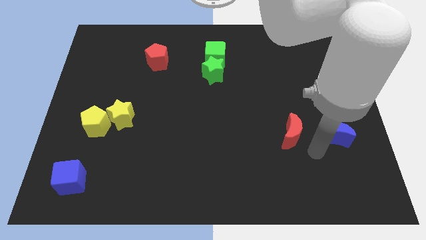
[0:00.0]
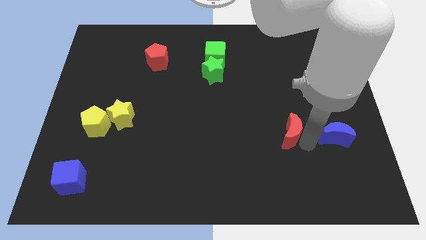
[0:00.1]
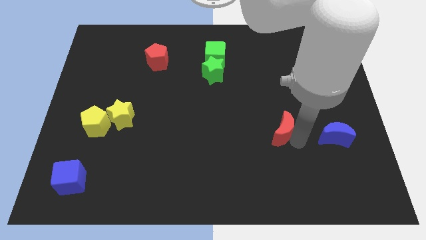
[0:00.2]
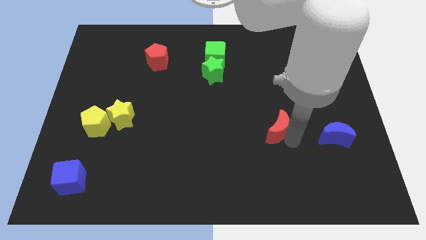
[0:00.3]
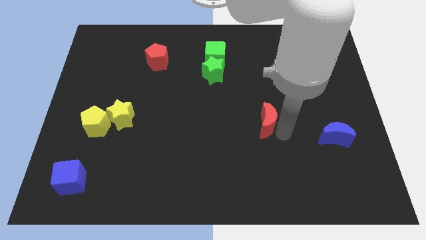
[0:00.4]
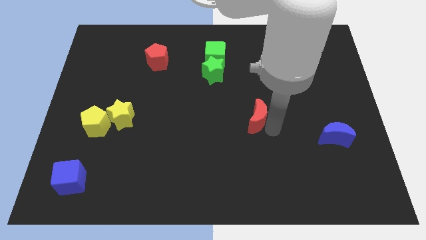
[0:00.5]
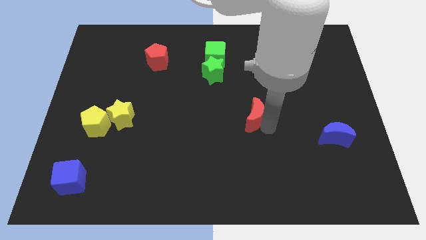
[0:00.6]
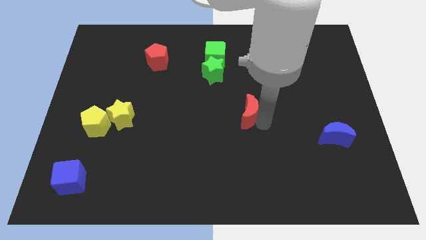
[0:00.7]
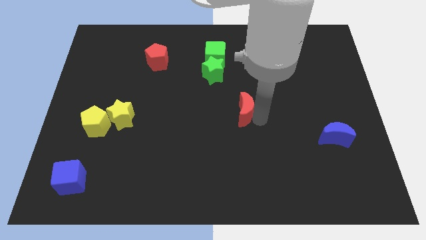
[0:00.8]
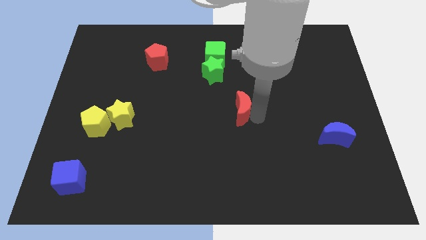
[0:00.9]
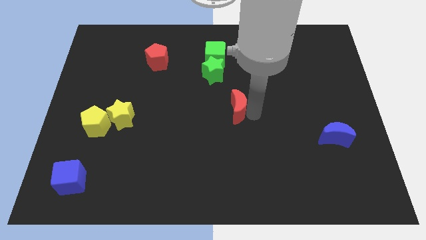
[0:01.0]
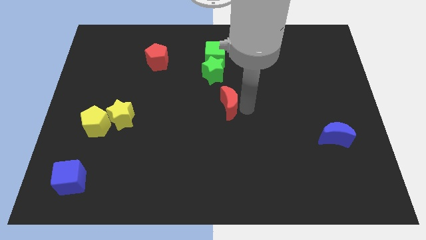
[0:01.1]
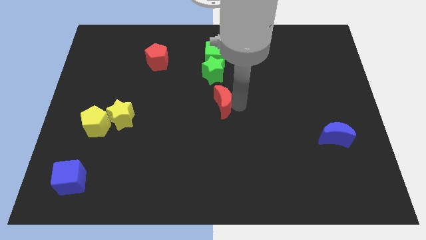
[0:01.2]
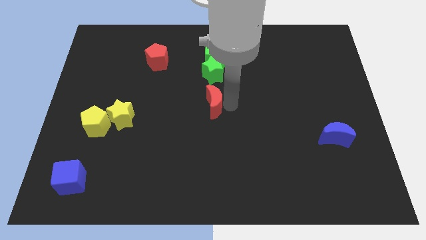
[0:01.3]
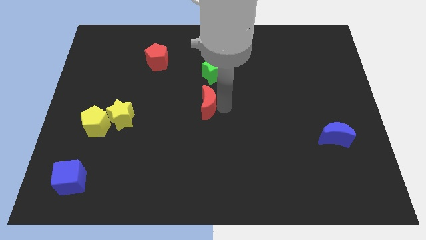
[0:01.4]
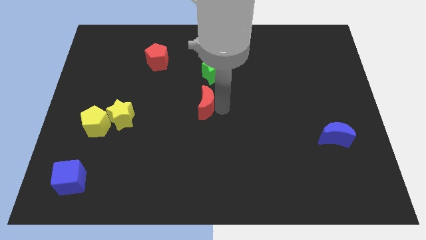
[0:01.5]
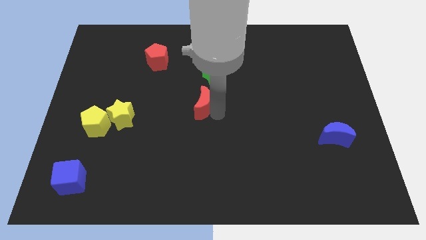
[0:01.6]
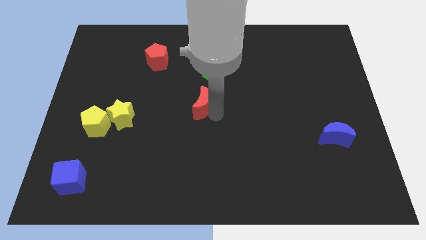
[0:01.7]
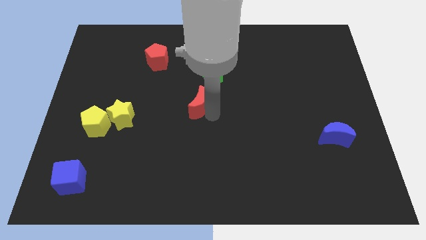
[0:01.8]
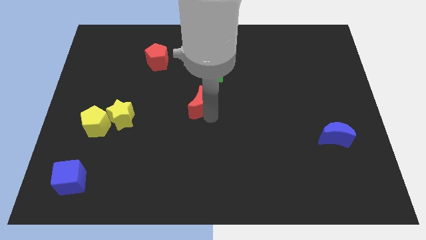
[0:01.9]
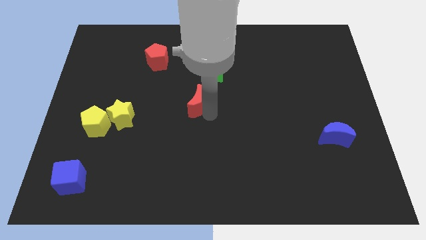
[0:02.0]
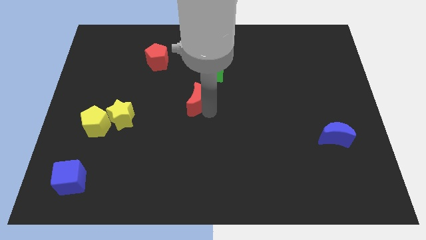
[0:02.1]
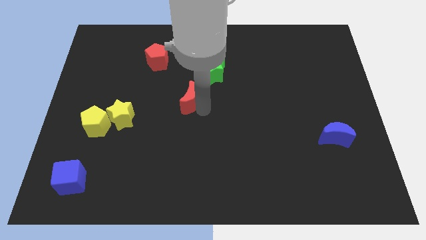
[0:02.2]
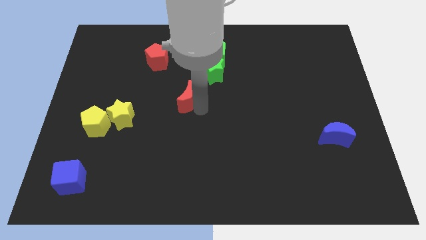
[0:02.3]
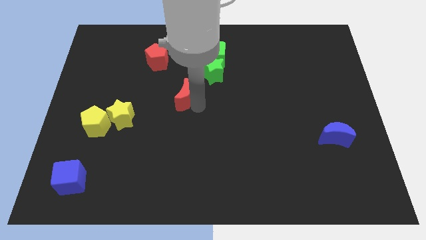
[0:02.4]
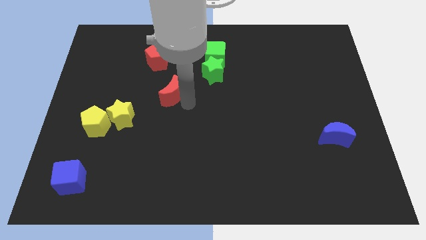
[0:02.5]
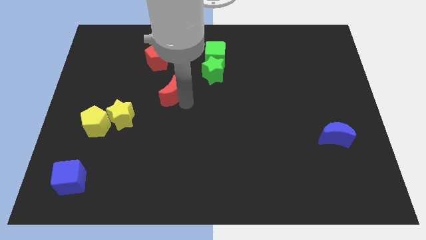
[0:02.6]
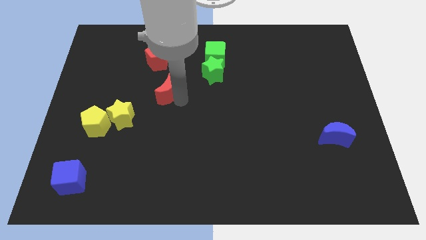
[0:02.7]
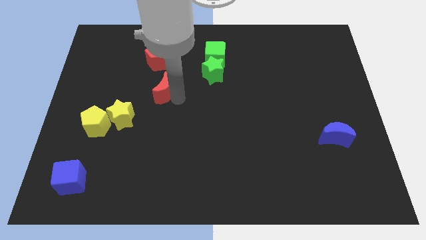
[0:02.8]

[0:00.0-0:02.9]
move the red moon diagonal top right to yellow star

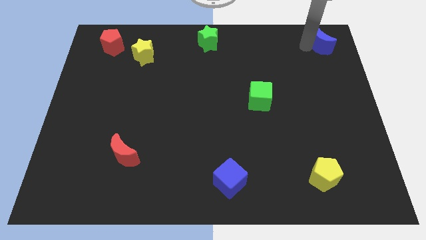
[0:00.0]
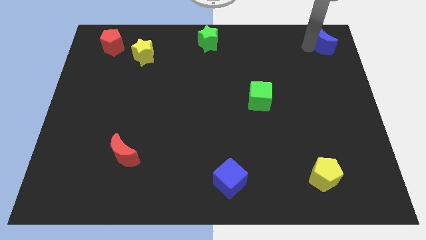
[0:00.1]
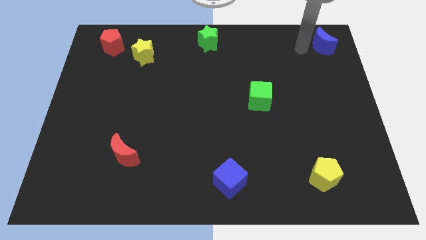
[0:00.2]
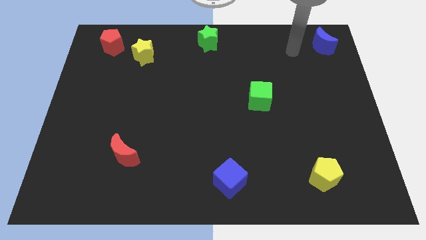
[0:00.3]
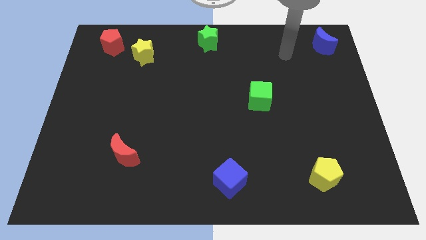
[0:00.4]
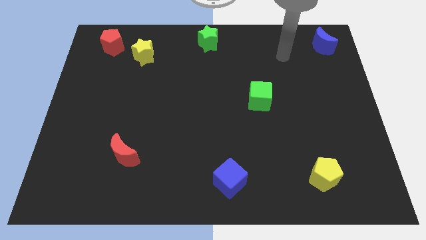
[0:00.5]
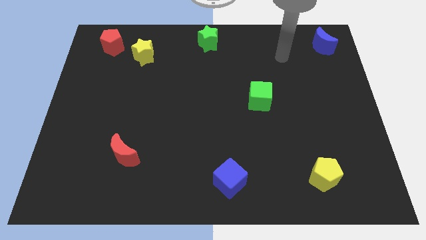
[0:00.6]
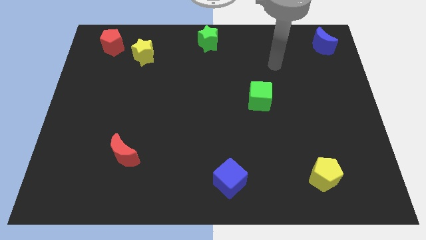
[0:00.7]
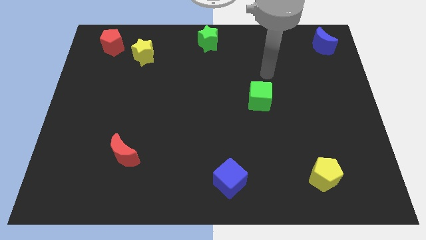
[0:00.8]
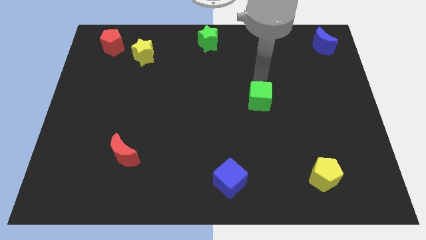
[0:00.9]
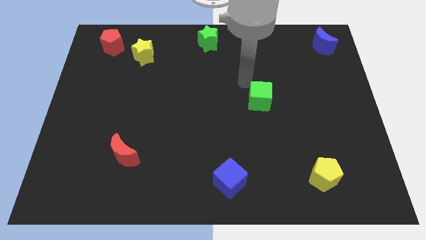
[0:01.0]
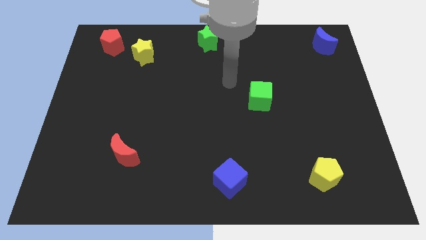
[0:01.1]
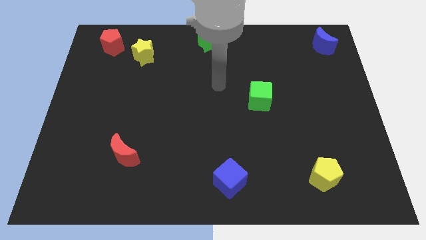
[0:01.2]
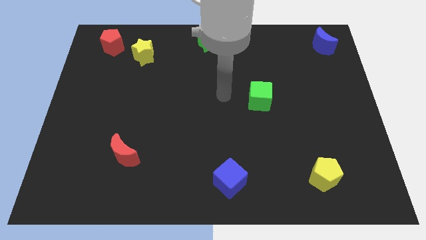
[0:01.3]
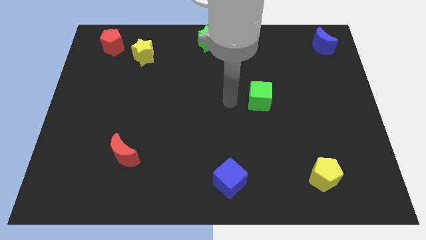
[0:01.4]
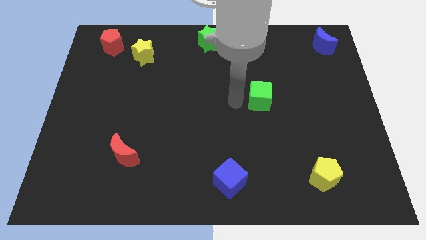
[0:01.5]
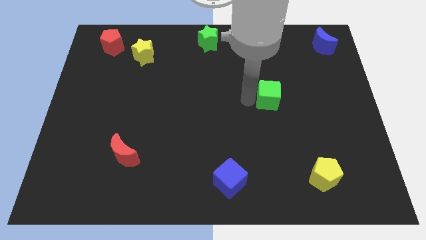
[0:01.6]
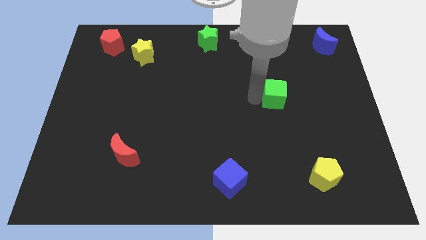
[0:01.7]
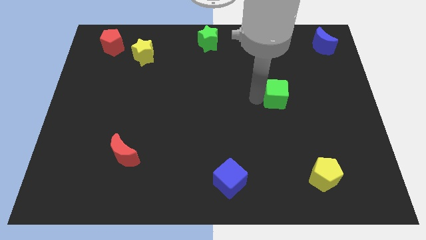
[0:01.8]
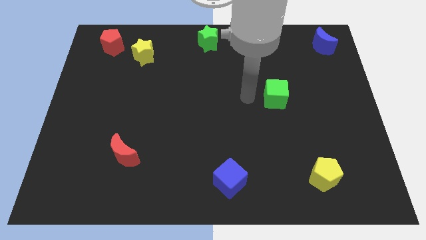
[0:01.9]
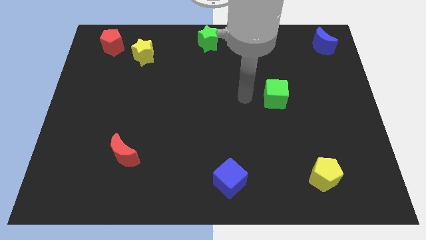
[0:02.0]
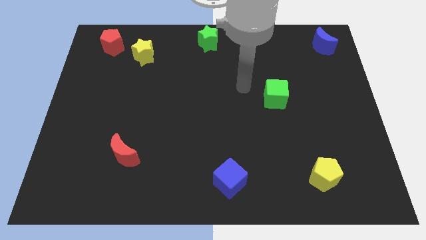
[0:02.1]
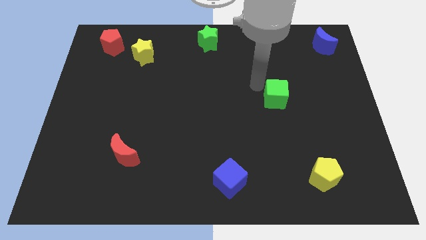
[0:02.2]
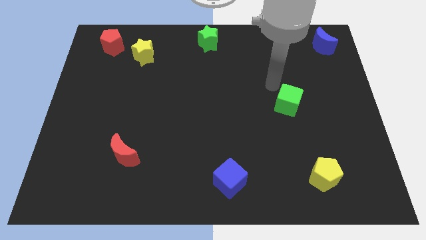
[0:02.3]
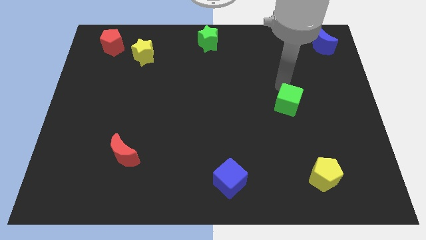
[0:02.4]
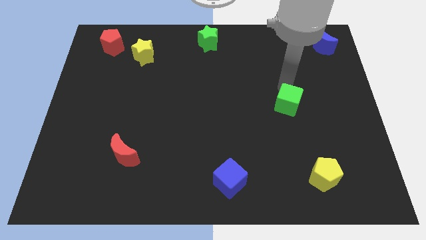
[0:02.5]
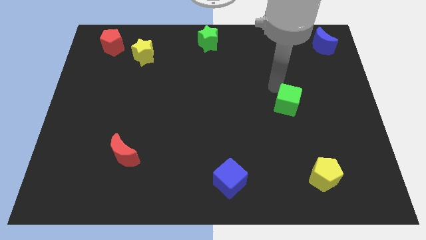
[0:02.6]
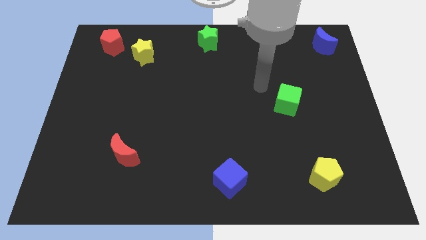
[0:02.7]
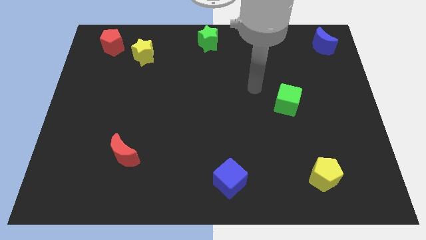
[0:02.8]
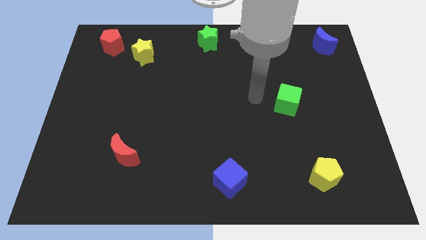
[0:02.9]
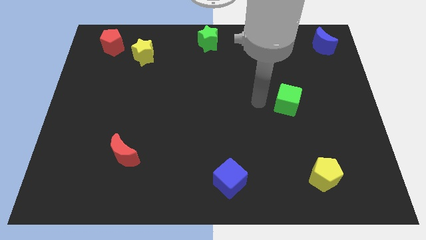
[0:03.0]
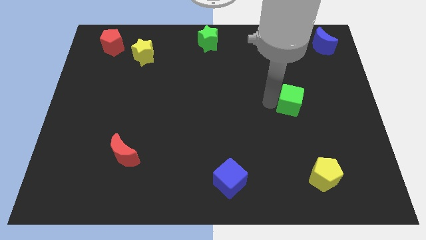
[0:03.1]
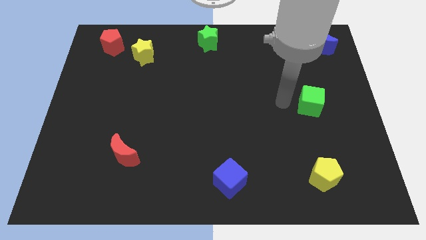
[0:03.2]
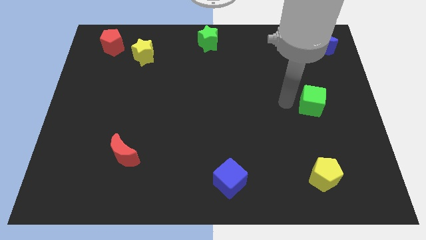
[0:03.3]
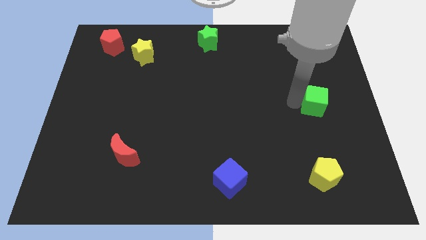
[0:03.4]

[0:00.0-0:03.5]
move the green cube towards the center right side of the board

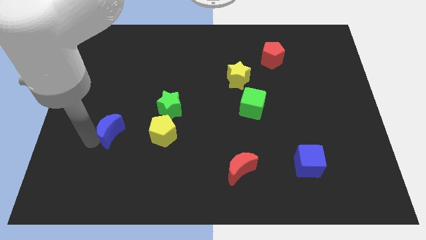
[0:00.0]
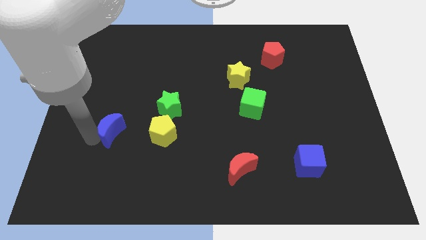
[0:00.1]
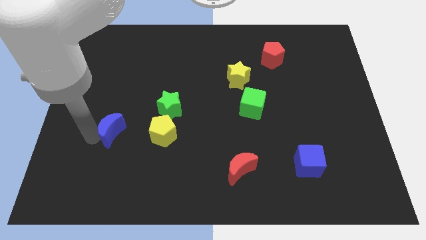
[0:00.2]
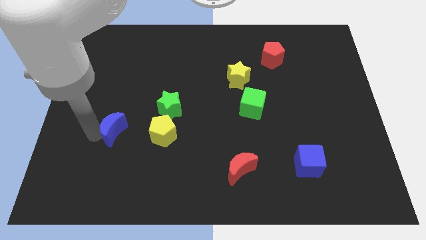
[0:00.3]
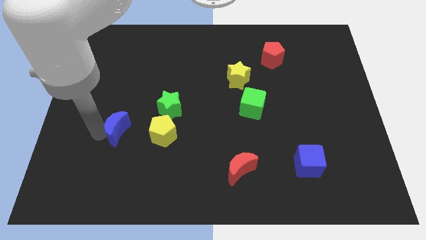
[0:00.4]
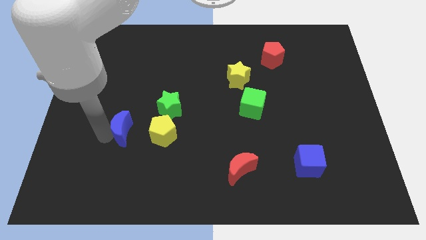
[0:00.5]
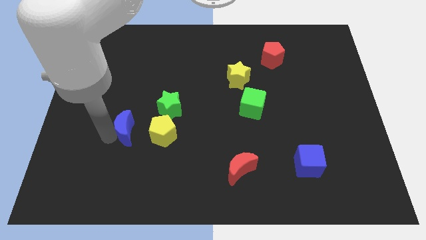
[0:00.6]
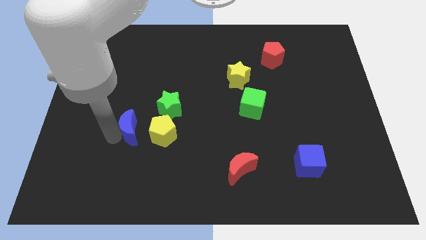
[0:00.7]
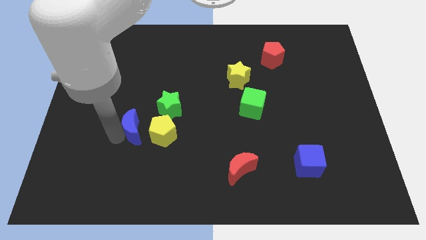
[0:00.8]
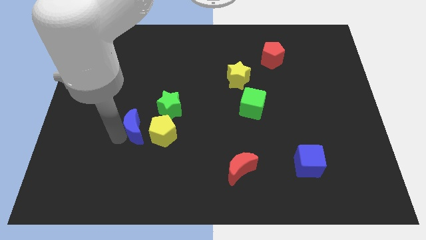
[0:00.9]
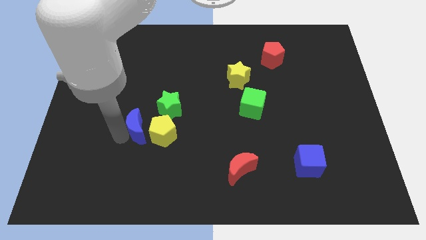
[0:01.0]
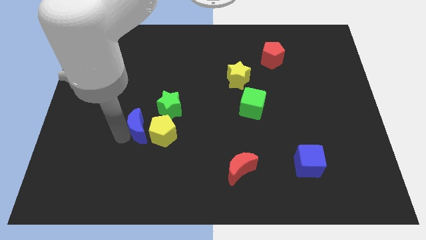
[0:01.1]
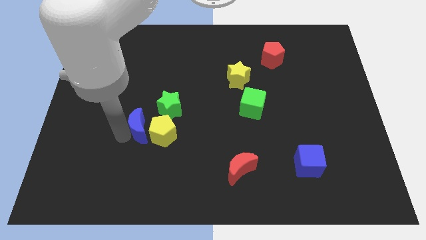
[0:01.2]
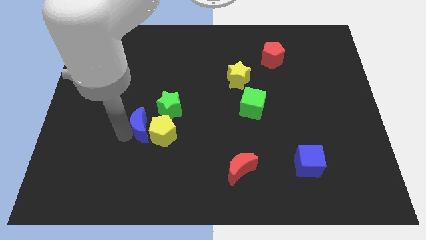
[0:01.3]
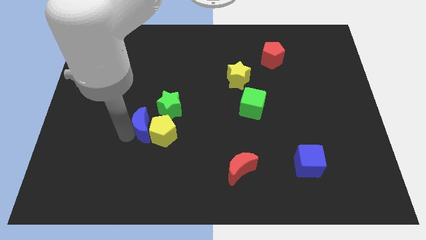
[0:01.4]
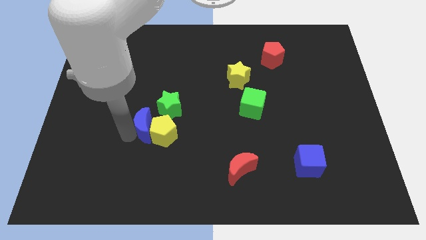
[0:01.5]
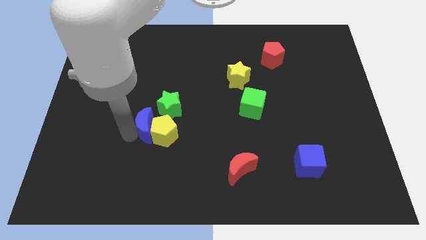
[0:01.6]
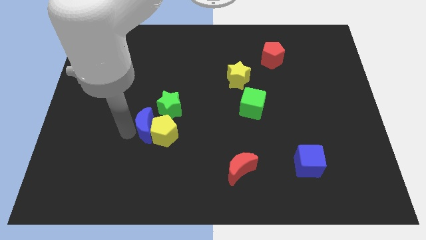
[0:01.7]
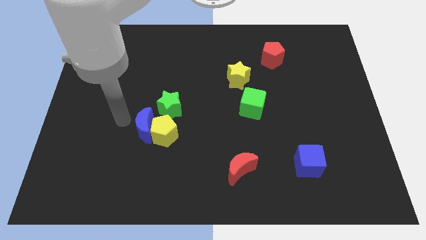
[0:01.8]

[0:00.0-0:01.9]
push the blue moon into the yellow pentagon

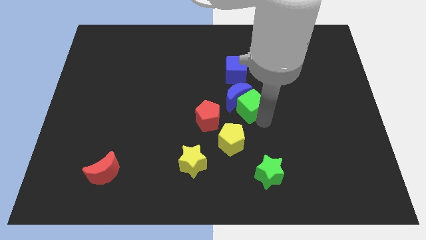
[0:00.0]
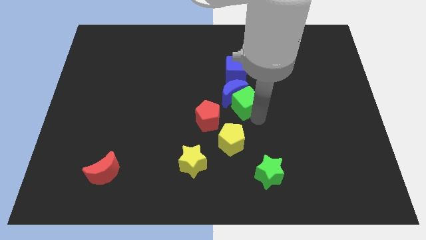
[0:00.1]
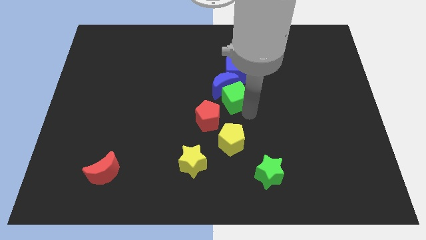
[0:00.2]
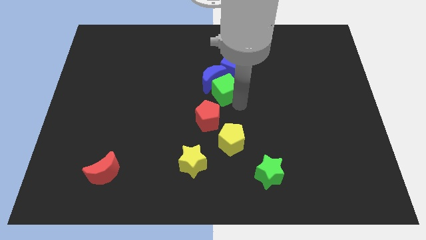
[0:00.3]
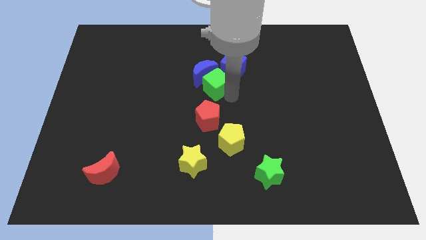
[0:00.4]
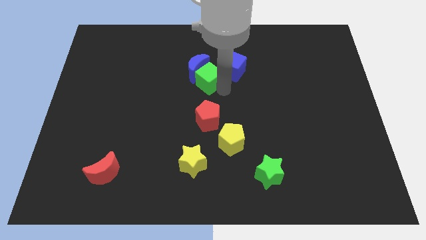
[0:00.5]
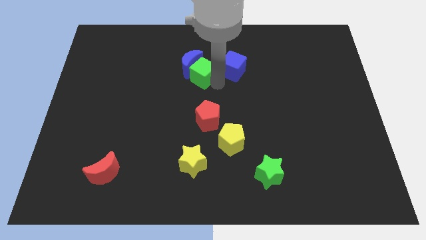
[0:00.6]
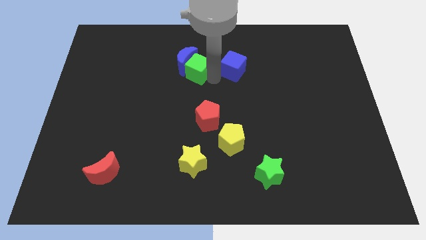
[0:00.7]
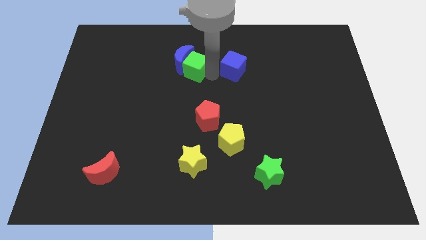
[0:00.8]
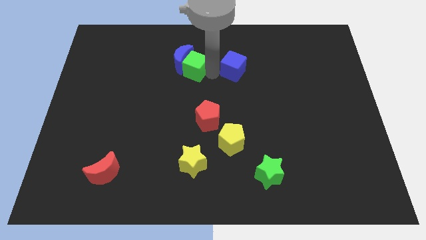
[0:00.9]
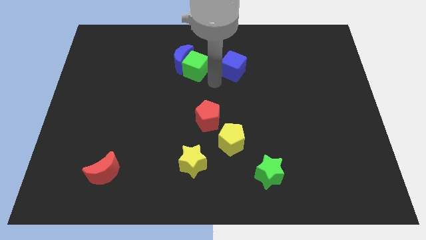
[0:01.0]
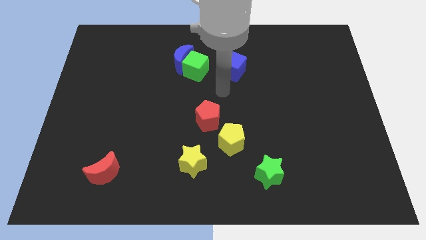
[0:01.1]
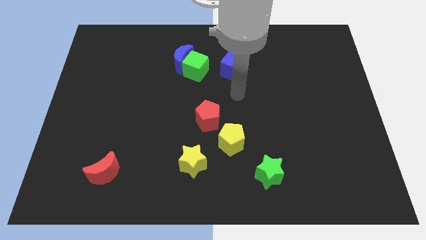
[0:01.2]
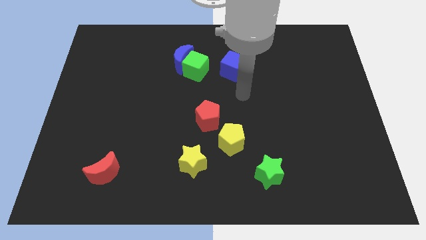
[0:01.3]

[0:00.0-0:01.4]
move the blue moon and green cube left to the blue cube
